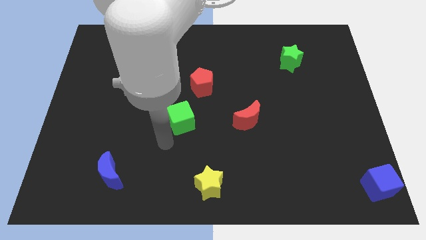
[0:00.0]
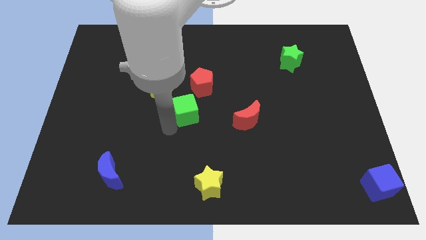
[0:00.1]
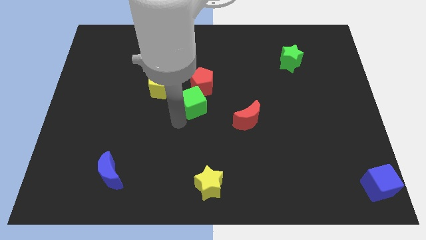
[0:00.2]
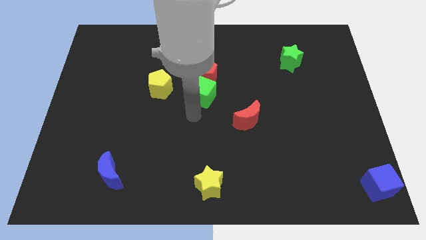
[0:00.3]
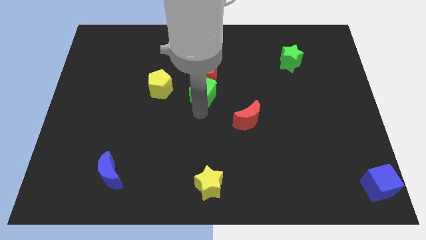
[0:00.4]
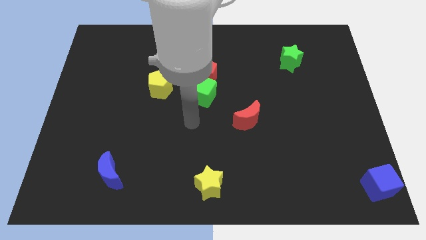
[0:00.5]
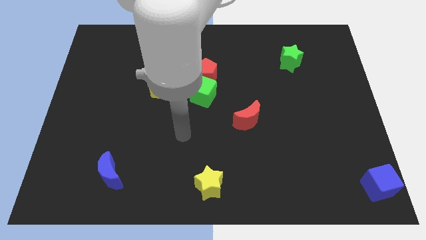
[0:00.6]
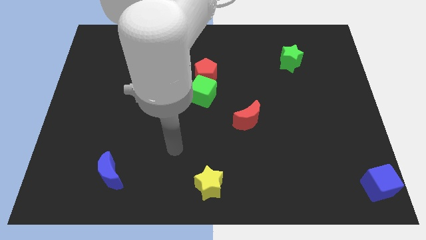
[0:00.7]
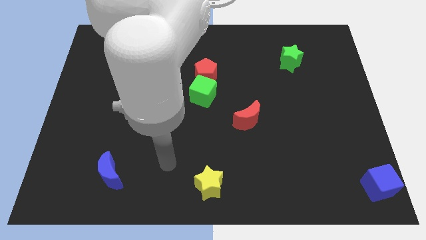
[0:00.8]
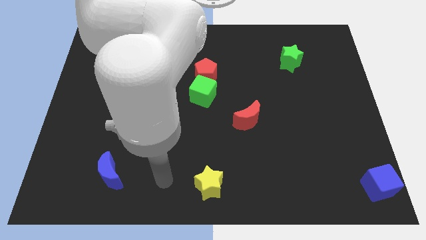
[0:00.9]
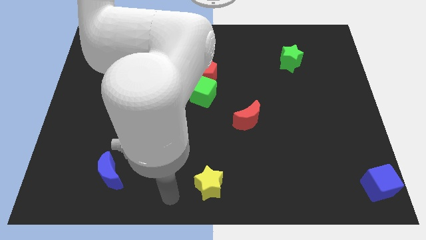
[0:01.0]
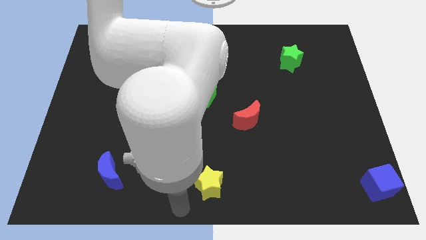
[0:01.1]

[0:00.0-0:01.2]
slide the green cube to the bottom of the red pentagon

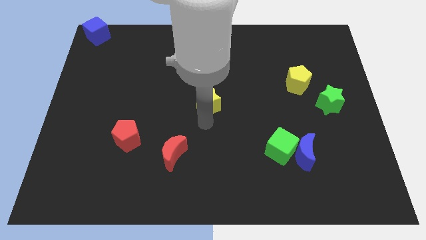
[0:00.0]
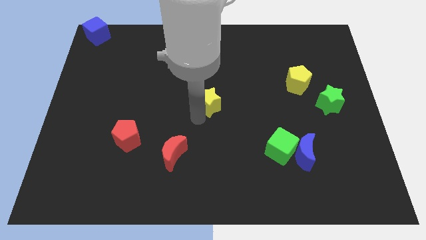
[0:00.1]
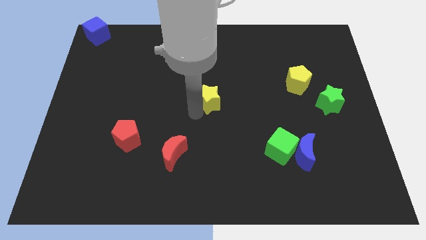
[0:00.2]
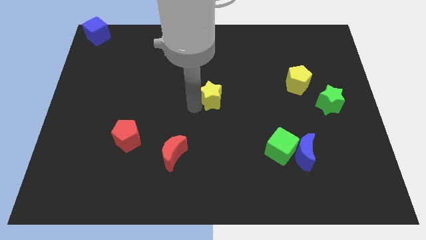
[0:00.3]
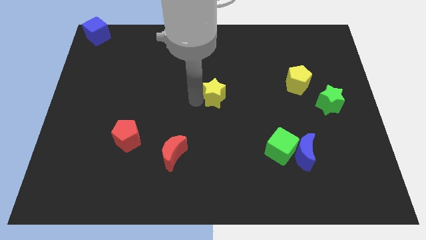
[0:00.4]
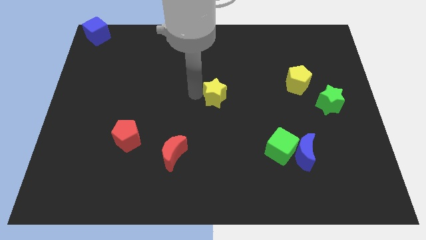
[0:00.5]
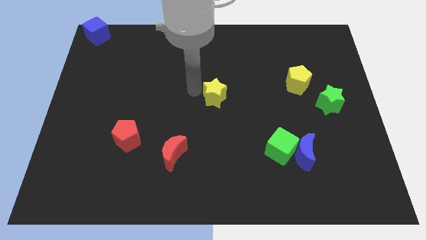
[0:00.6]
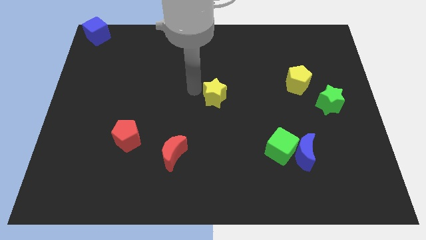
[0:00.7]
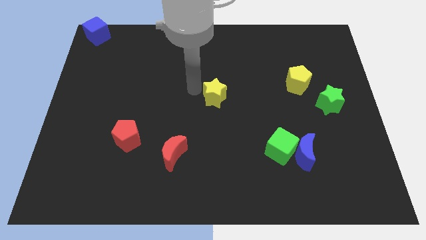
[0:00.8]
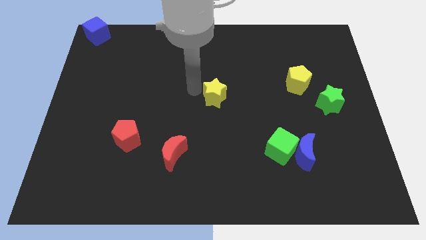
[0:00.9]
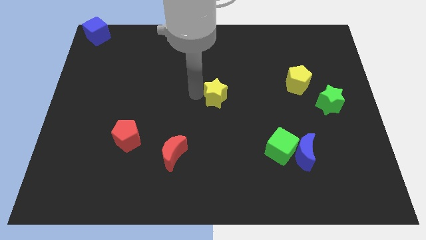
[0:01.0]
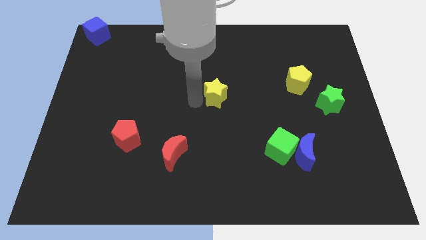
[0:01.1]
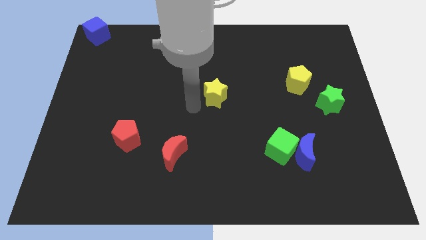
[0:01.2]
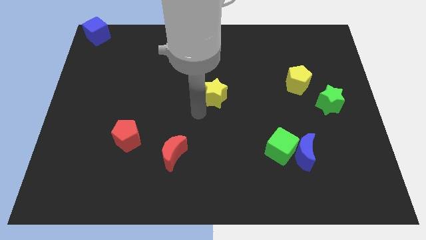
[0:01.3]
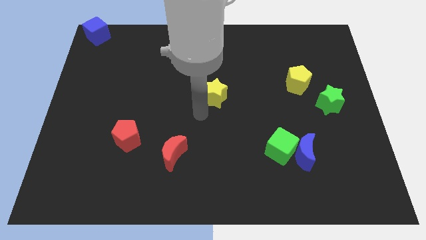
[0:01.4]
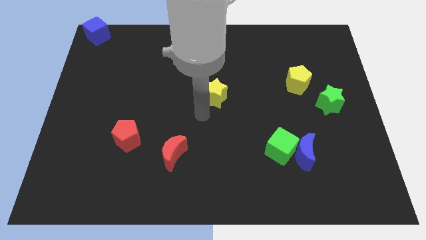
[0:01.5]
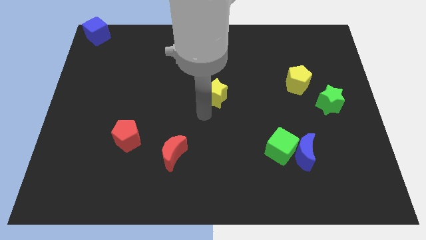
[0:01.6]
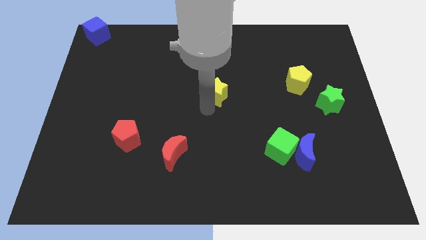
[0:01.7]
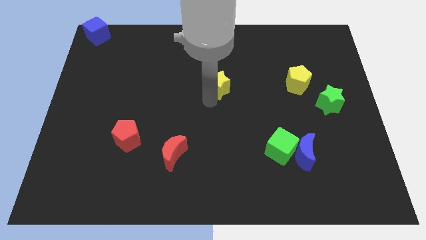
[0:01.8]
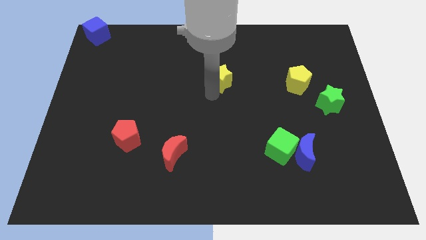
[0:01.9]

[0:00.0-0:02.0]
place yellow star to the left of yellow pentagon

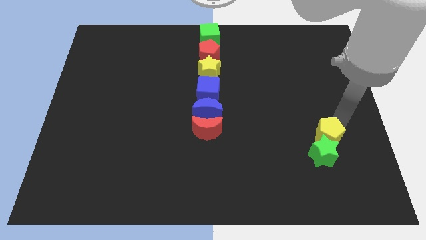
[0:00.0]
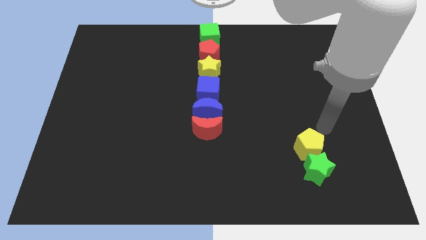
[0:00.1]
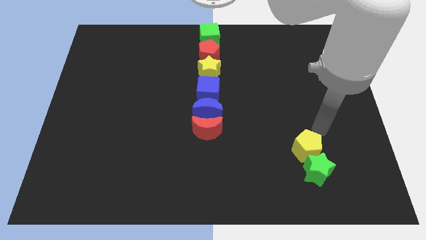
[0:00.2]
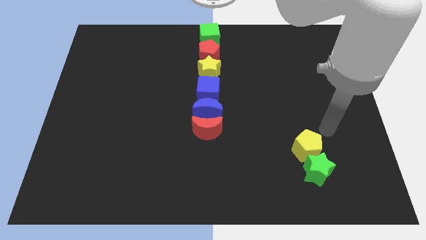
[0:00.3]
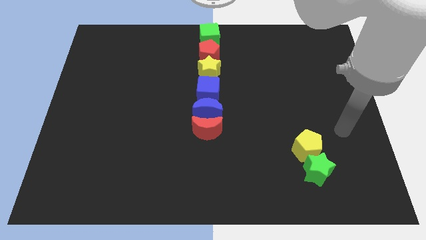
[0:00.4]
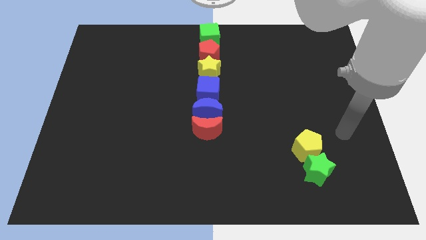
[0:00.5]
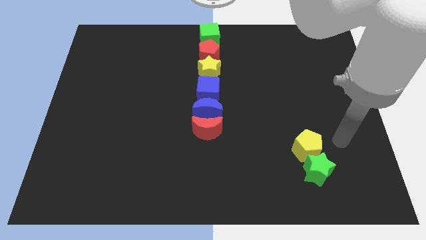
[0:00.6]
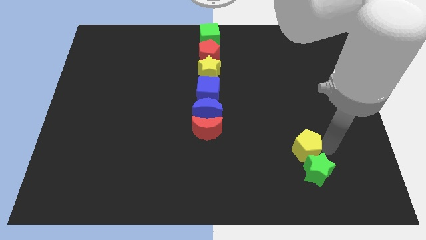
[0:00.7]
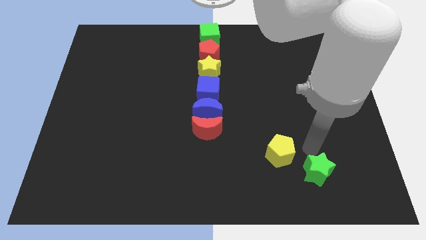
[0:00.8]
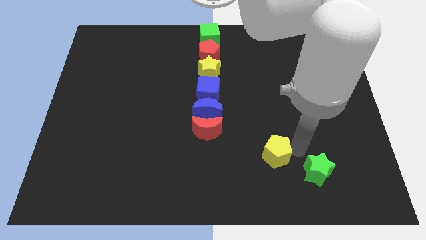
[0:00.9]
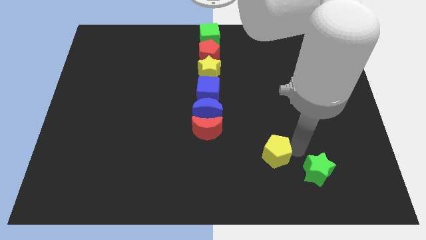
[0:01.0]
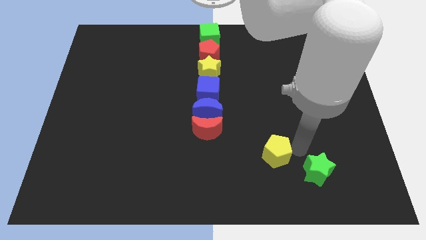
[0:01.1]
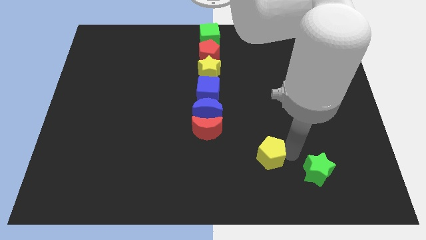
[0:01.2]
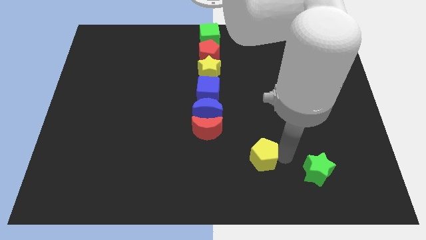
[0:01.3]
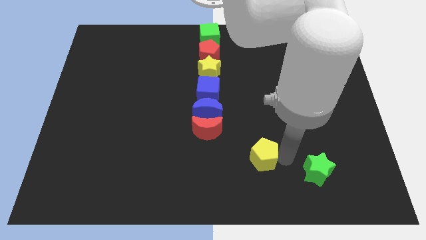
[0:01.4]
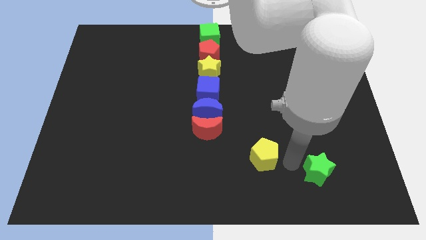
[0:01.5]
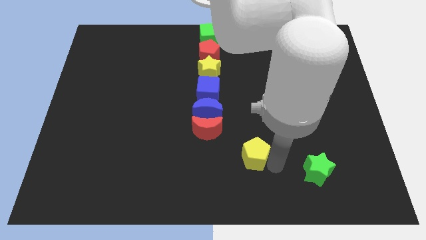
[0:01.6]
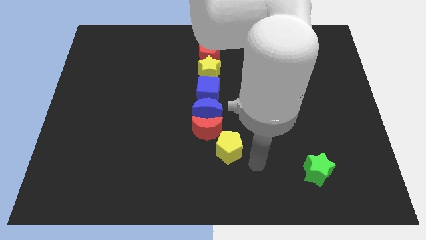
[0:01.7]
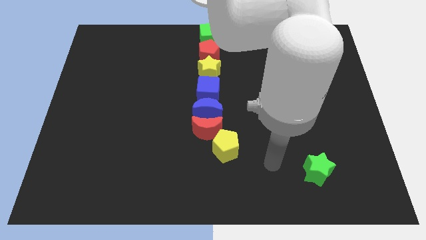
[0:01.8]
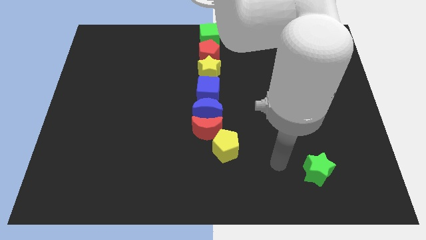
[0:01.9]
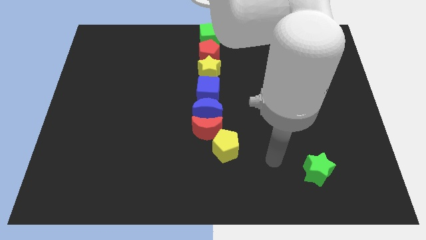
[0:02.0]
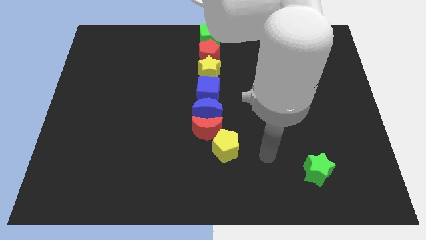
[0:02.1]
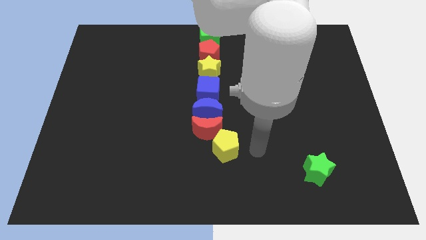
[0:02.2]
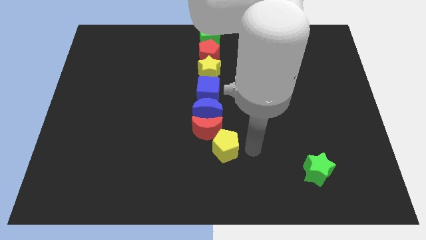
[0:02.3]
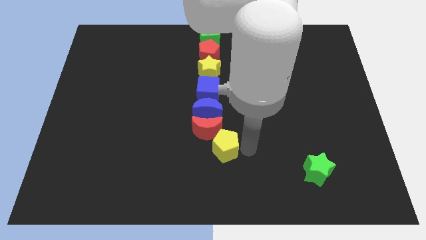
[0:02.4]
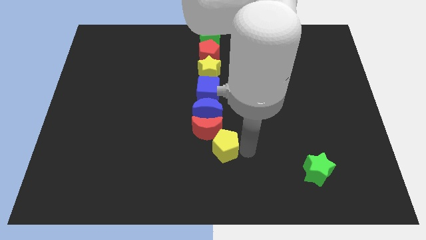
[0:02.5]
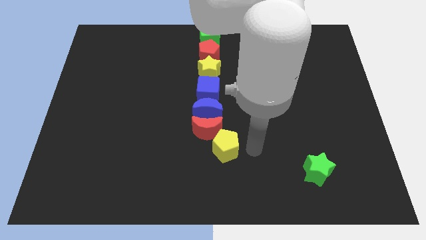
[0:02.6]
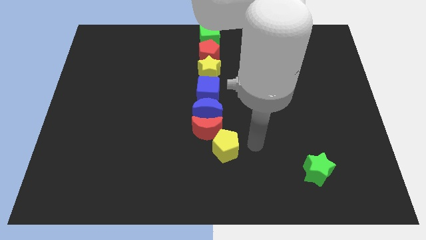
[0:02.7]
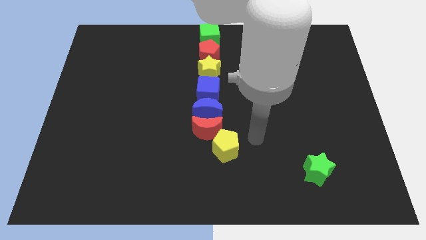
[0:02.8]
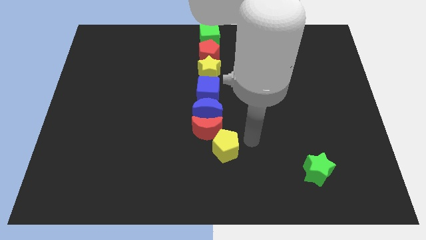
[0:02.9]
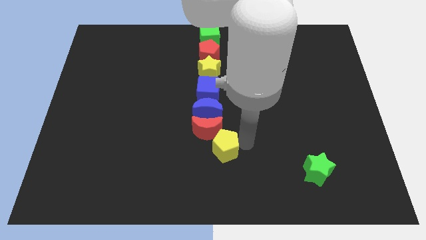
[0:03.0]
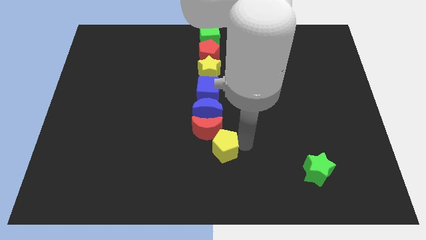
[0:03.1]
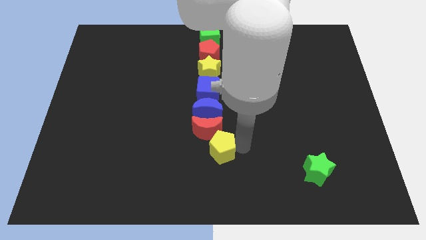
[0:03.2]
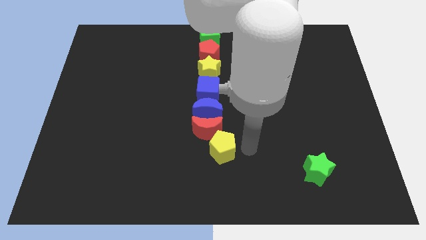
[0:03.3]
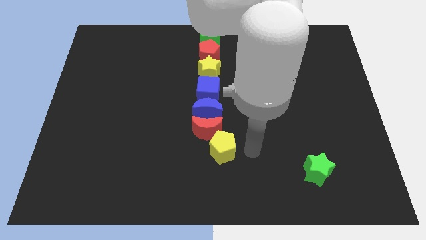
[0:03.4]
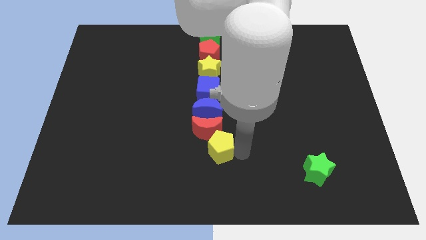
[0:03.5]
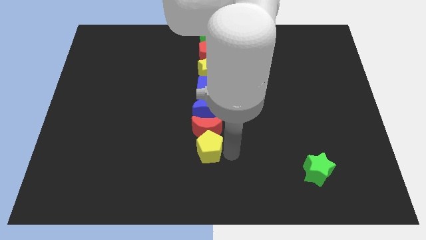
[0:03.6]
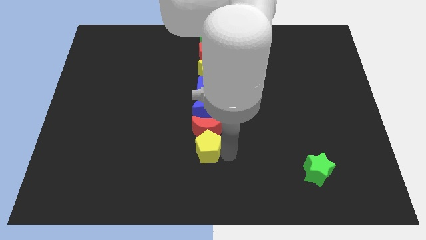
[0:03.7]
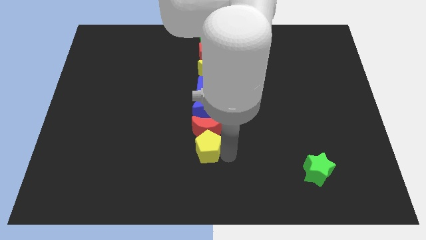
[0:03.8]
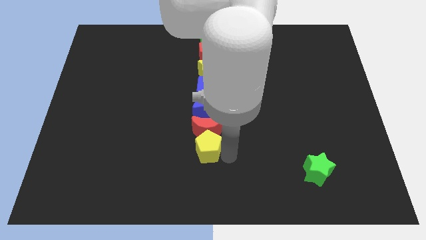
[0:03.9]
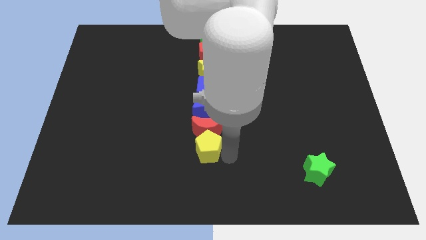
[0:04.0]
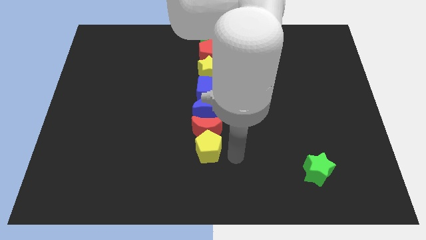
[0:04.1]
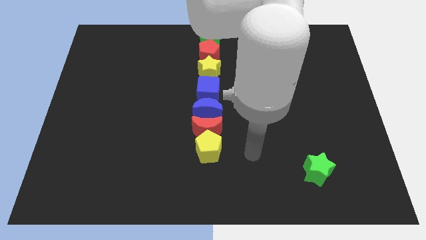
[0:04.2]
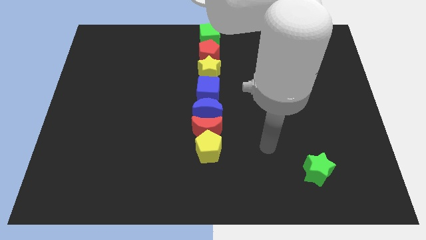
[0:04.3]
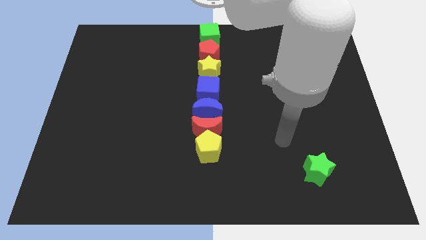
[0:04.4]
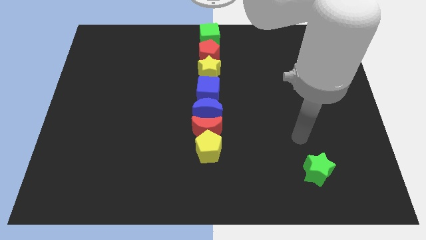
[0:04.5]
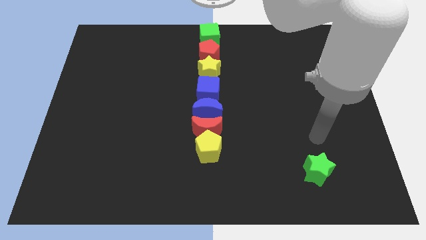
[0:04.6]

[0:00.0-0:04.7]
separate the yellow pentagon from the green star to left

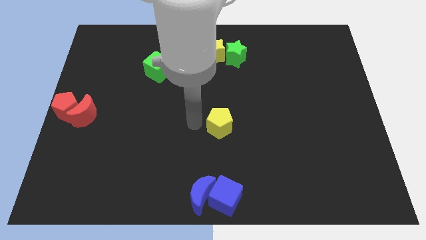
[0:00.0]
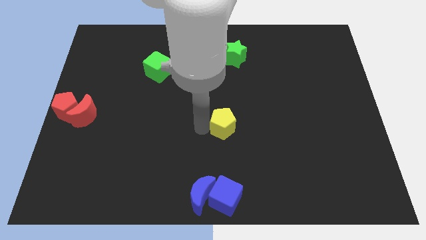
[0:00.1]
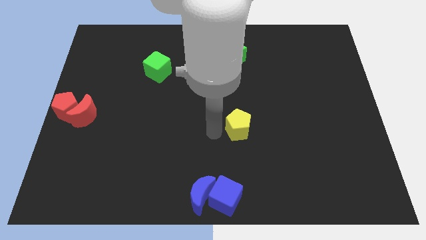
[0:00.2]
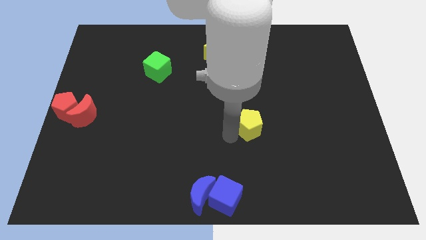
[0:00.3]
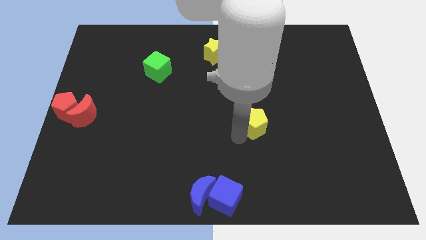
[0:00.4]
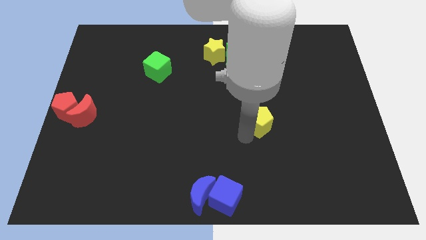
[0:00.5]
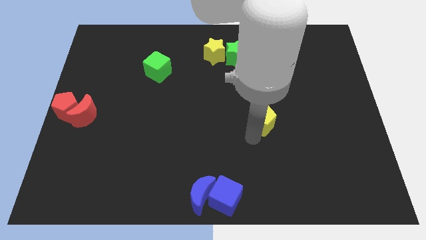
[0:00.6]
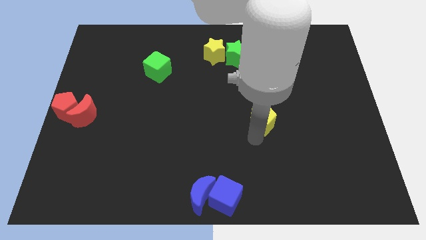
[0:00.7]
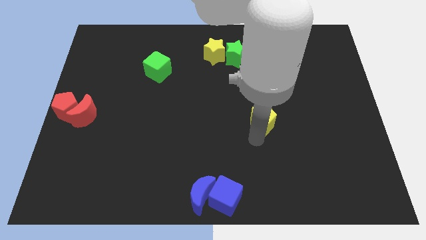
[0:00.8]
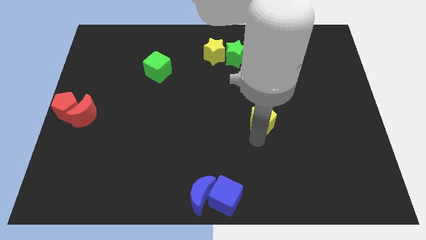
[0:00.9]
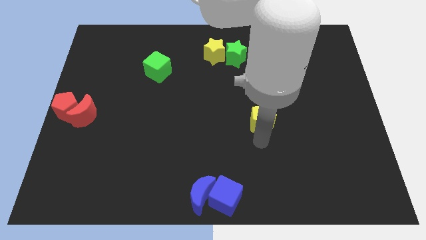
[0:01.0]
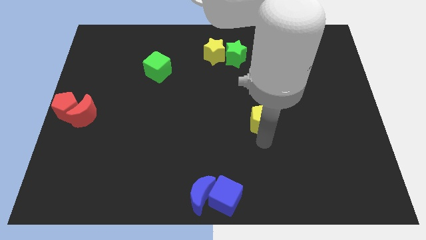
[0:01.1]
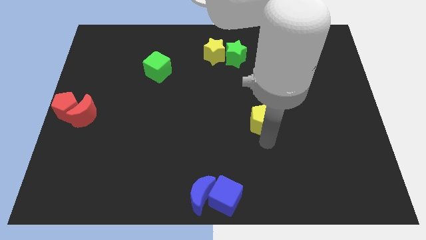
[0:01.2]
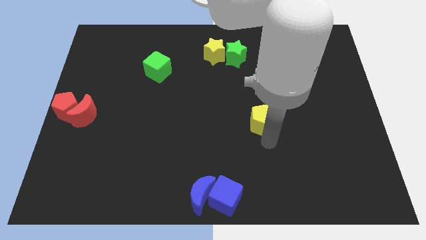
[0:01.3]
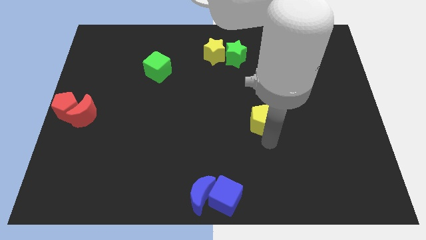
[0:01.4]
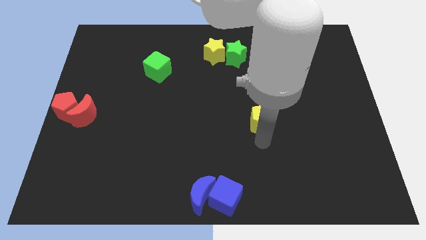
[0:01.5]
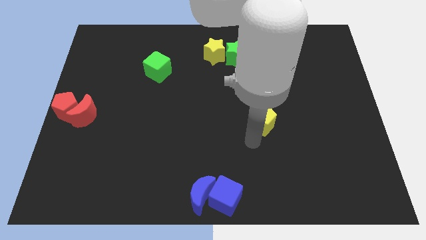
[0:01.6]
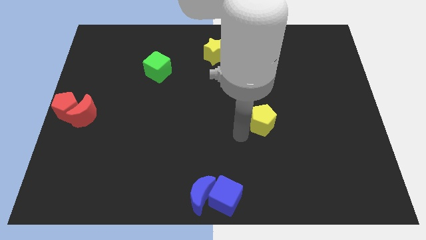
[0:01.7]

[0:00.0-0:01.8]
slightly push the yellow pentagon right to the board
